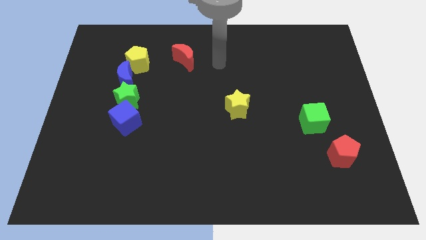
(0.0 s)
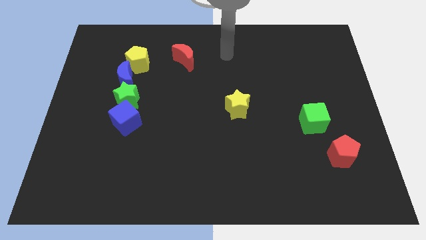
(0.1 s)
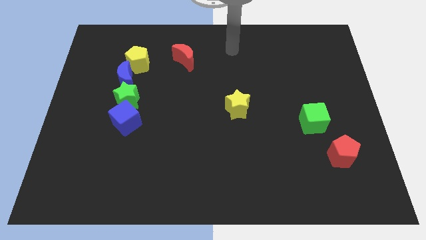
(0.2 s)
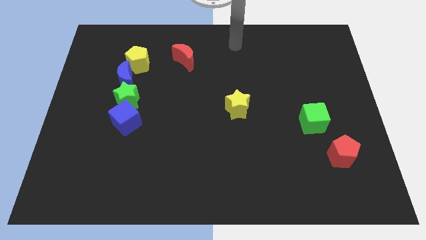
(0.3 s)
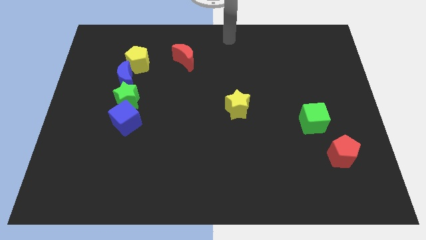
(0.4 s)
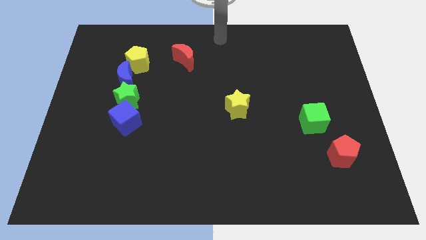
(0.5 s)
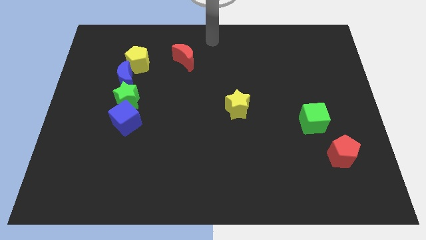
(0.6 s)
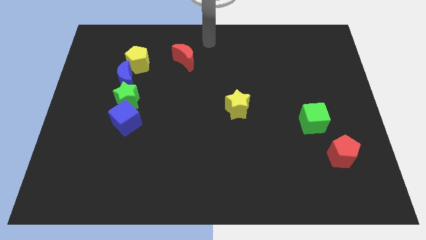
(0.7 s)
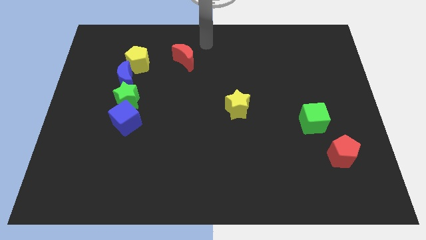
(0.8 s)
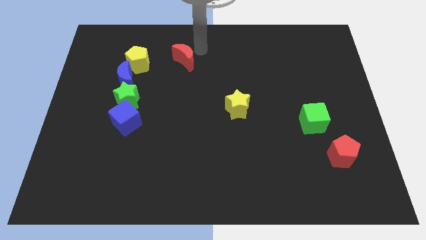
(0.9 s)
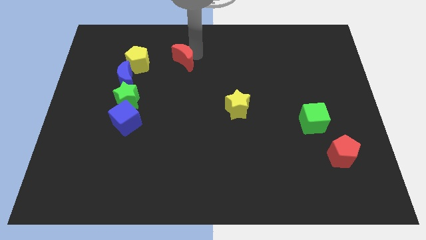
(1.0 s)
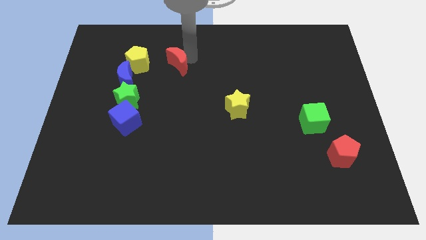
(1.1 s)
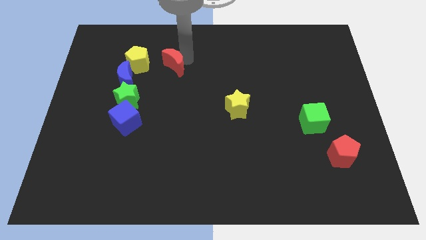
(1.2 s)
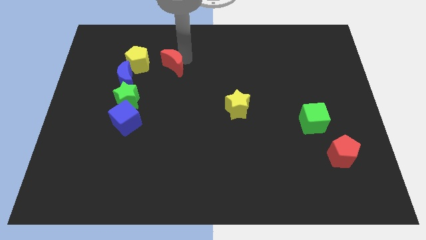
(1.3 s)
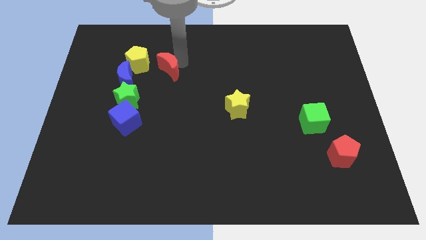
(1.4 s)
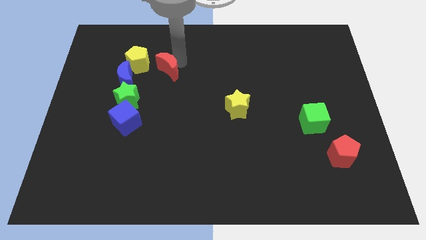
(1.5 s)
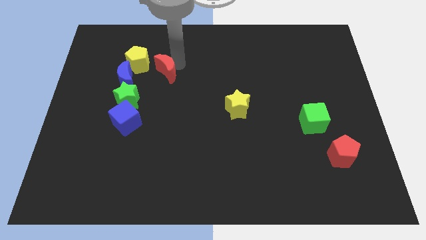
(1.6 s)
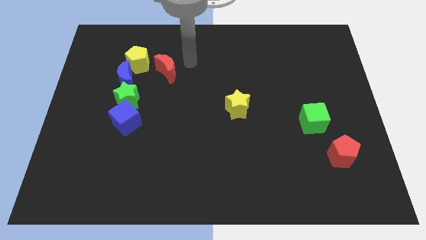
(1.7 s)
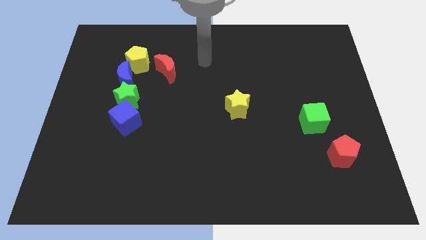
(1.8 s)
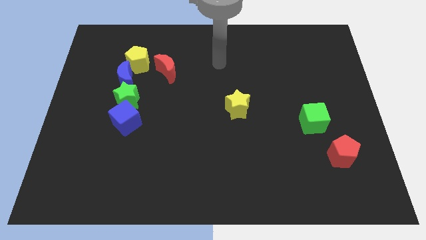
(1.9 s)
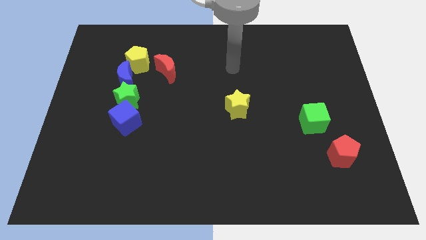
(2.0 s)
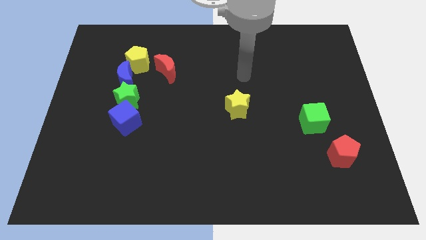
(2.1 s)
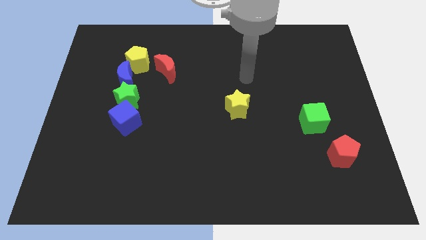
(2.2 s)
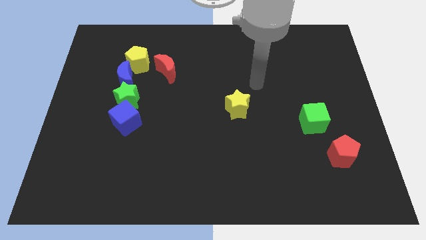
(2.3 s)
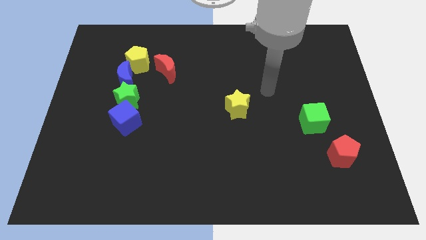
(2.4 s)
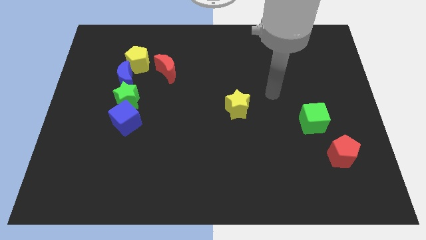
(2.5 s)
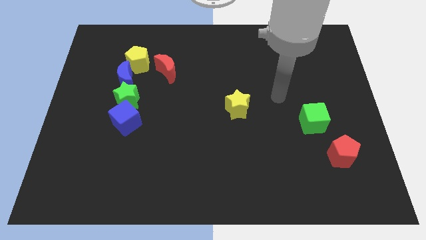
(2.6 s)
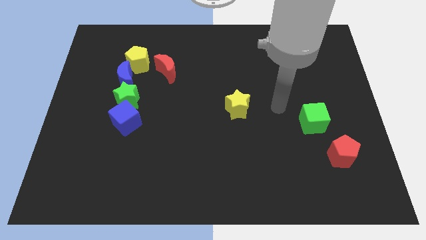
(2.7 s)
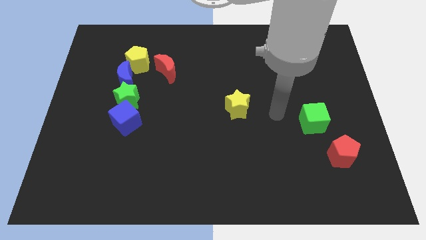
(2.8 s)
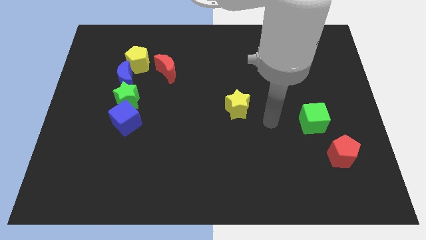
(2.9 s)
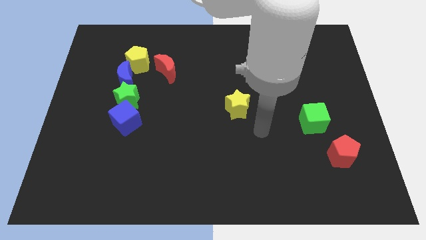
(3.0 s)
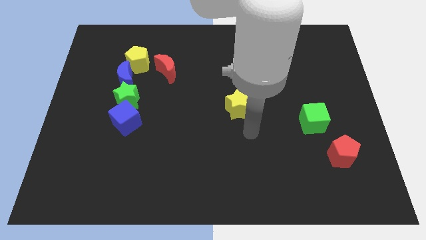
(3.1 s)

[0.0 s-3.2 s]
move the red crescent towards the yellow pentagon

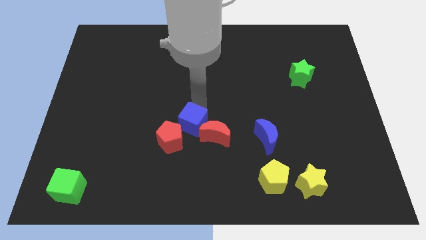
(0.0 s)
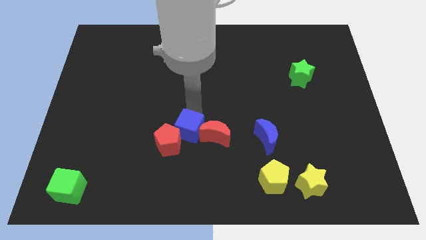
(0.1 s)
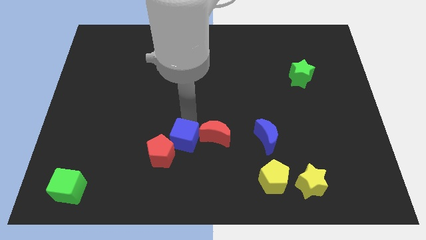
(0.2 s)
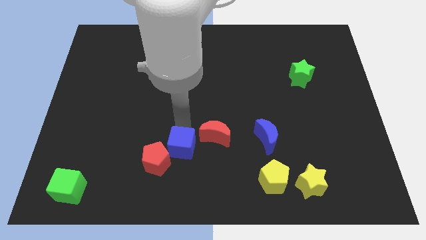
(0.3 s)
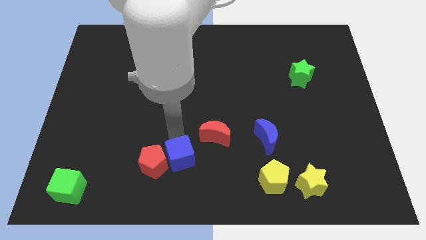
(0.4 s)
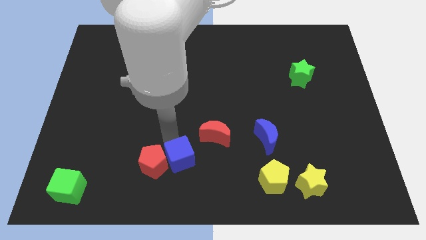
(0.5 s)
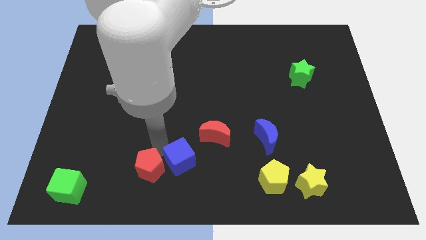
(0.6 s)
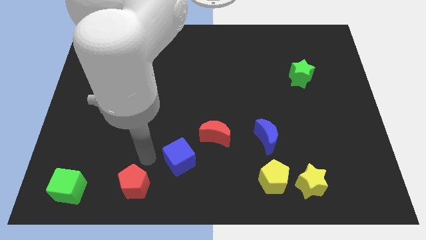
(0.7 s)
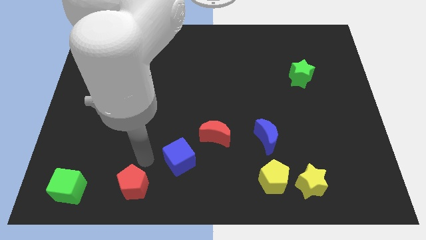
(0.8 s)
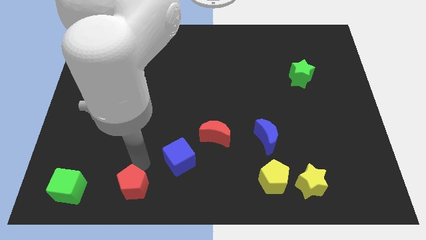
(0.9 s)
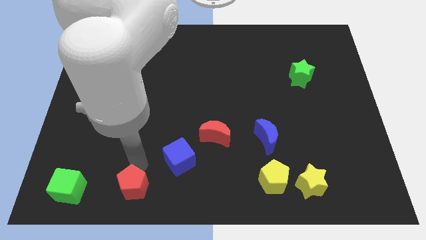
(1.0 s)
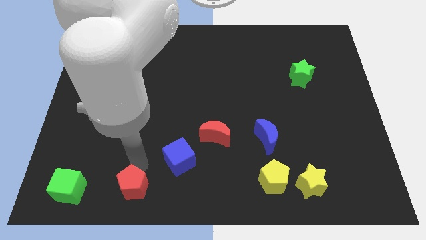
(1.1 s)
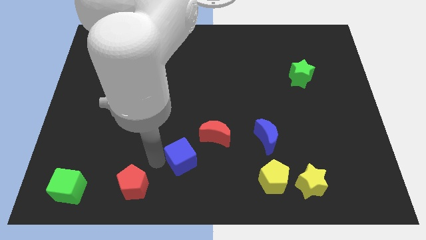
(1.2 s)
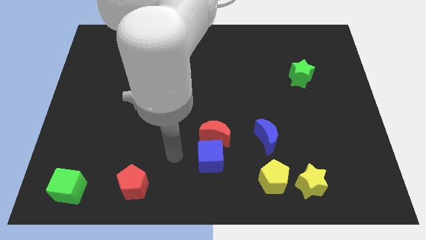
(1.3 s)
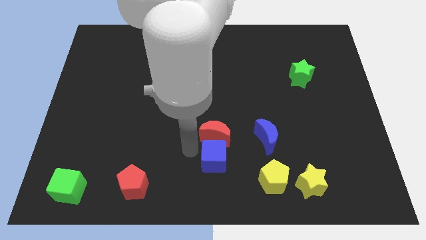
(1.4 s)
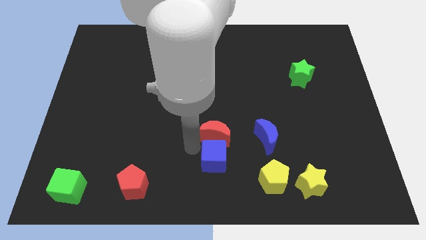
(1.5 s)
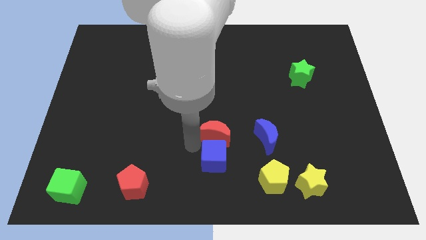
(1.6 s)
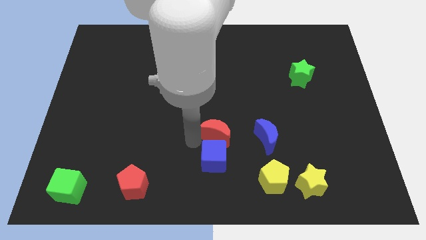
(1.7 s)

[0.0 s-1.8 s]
hit the blue cube

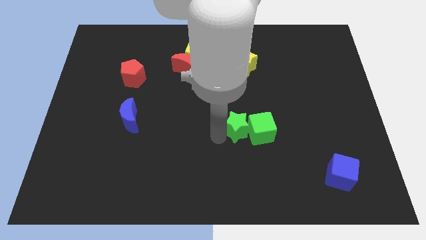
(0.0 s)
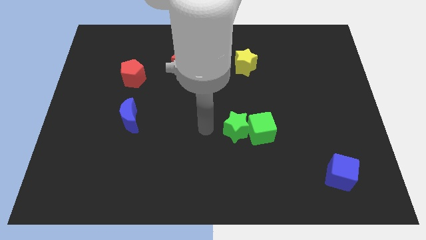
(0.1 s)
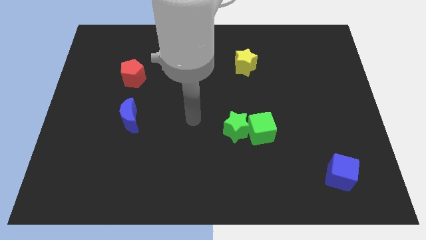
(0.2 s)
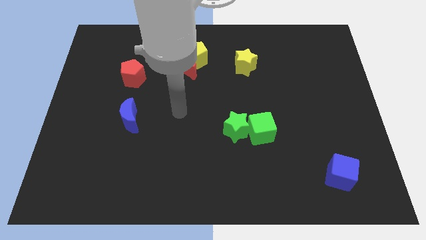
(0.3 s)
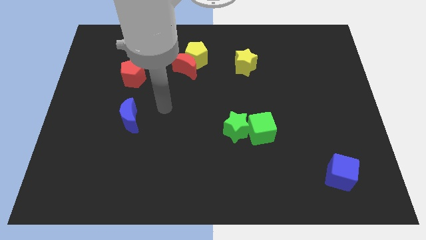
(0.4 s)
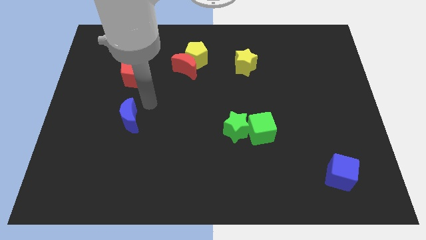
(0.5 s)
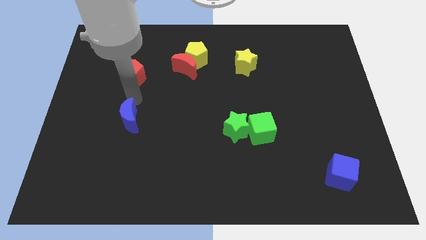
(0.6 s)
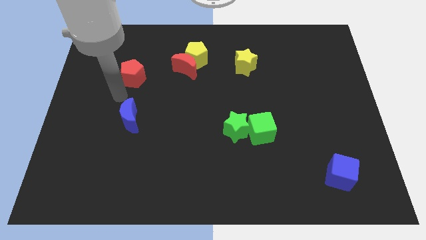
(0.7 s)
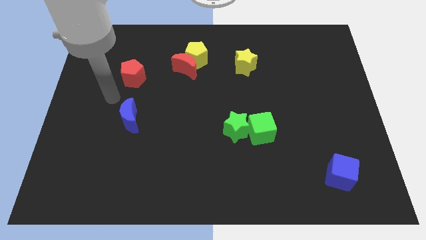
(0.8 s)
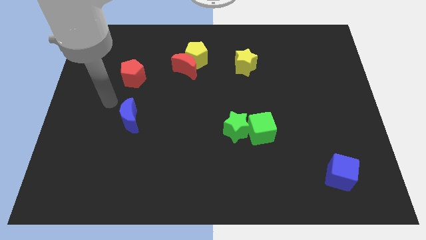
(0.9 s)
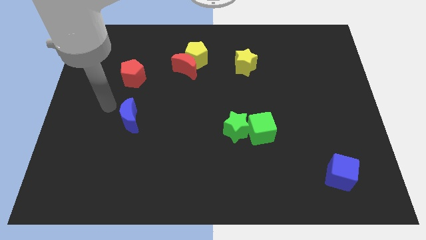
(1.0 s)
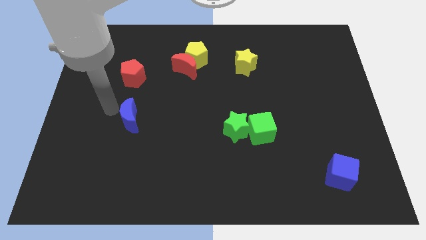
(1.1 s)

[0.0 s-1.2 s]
move your arm to the left of blue moon

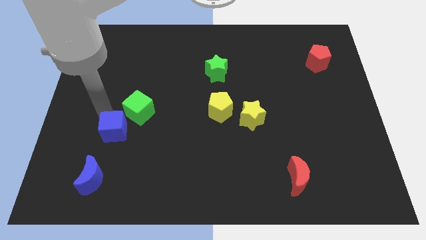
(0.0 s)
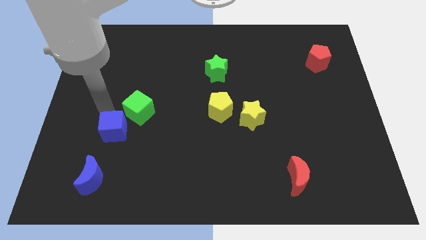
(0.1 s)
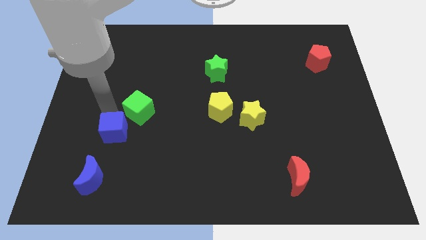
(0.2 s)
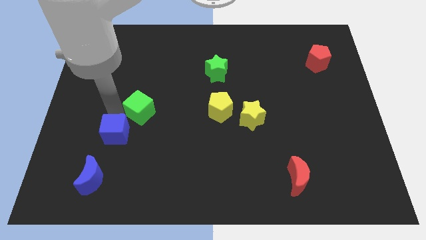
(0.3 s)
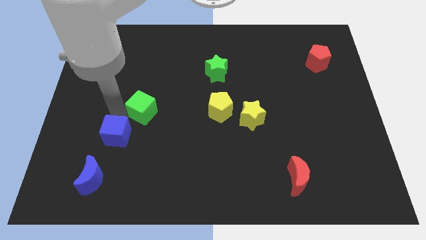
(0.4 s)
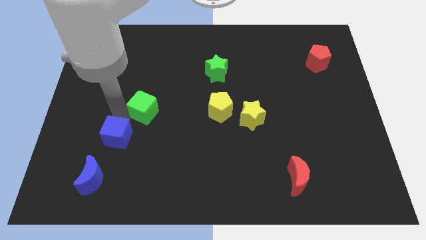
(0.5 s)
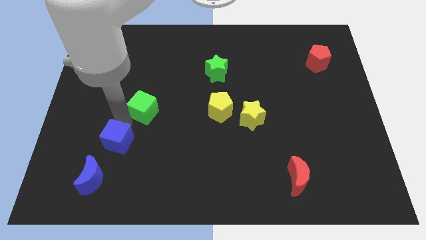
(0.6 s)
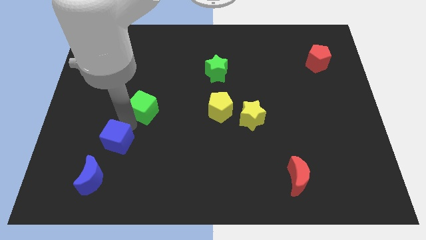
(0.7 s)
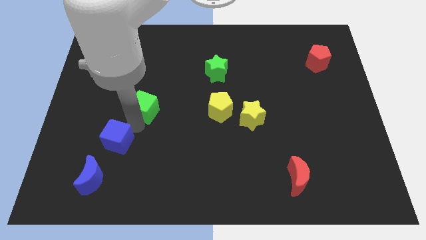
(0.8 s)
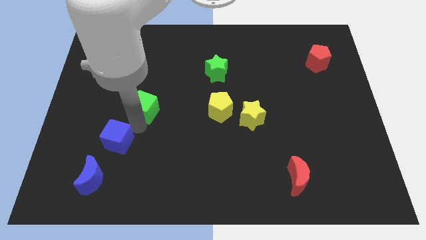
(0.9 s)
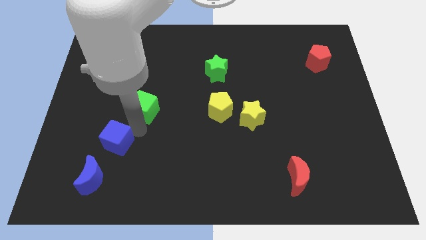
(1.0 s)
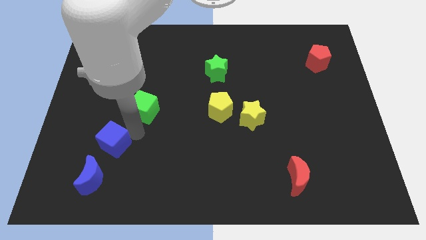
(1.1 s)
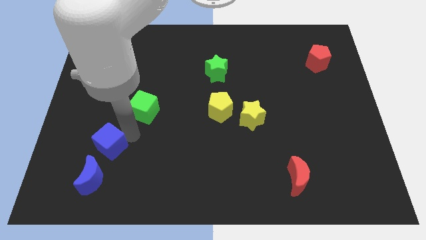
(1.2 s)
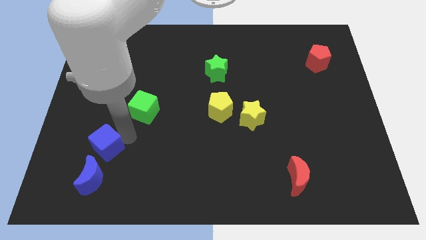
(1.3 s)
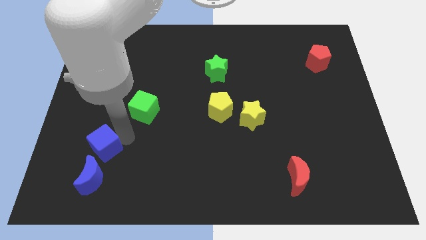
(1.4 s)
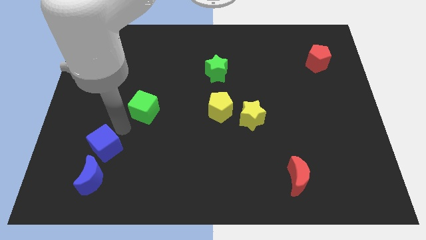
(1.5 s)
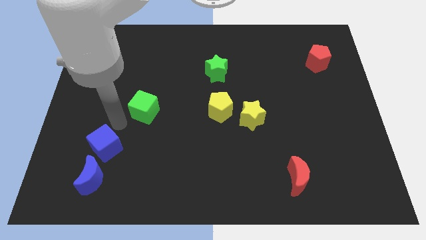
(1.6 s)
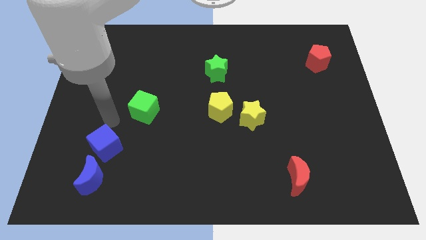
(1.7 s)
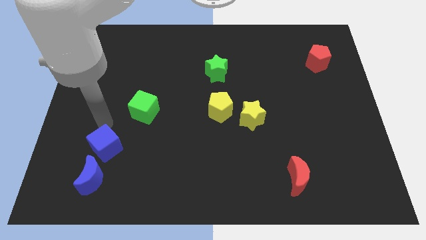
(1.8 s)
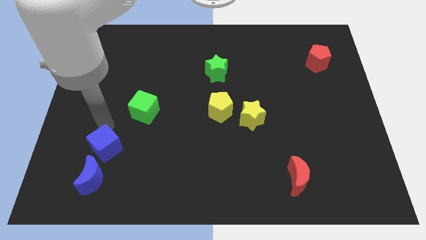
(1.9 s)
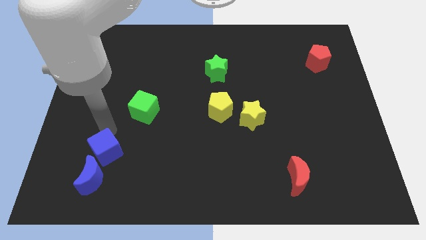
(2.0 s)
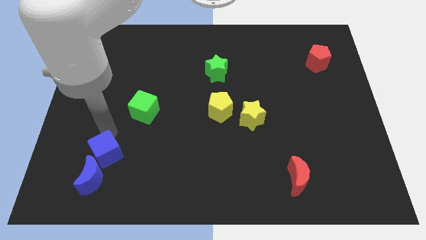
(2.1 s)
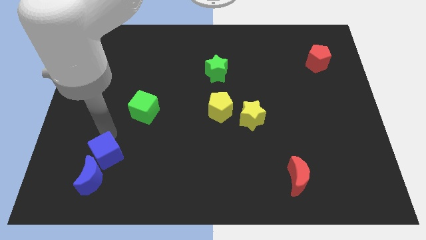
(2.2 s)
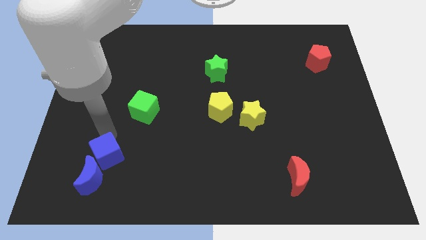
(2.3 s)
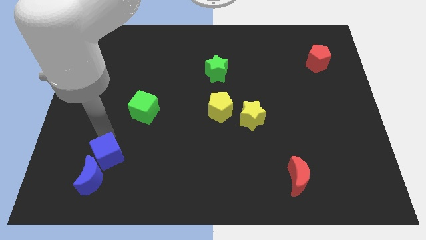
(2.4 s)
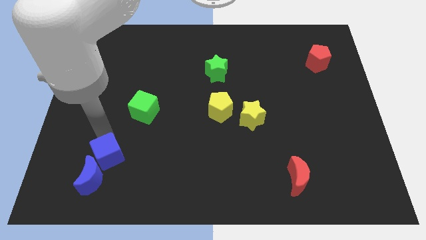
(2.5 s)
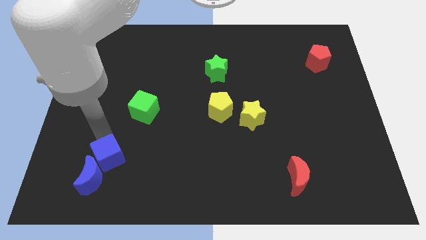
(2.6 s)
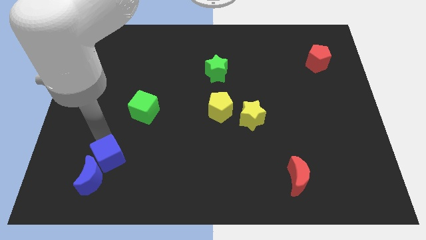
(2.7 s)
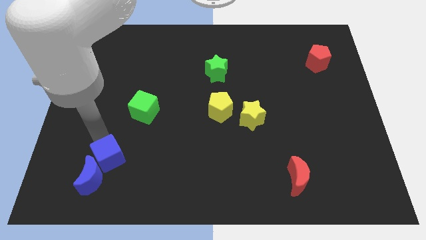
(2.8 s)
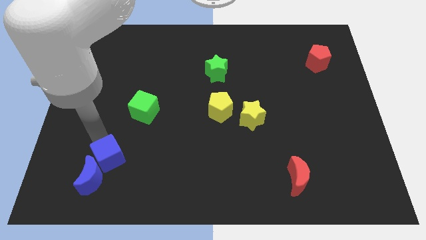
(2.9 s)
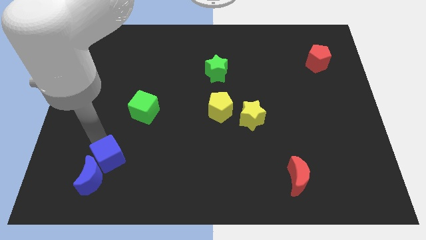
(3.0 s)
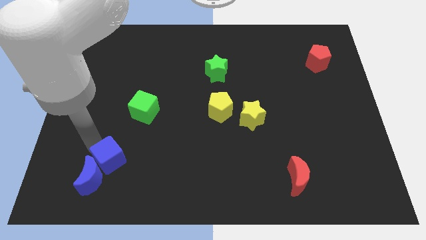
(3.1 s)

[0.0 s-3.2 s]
place the blue cube diagonally top right to the blue moon
